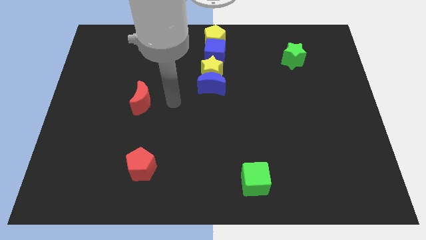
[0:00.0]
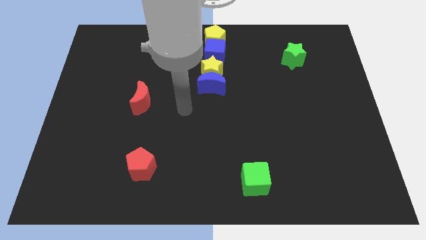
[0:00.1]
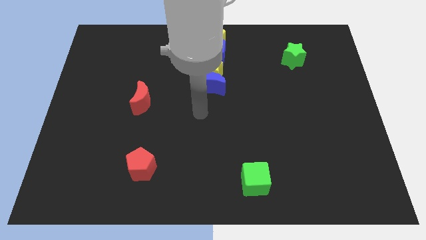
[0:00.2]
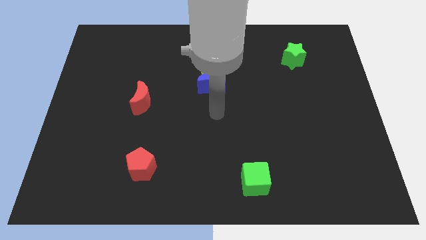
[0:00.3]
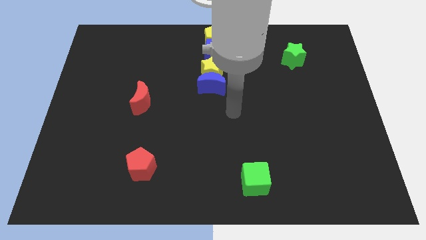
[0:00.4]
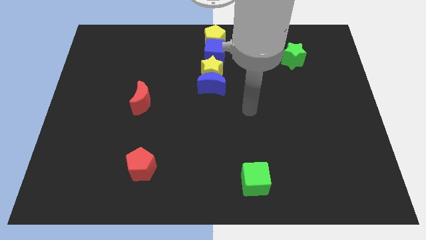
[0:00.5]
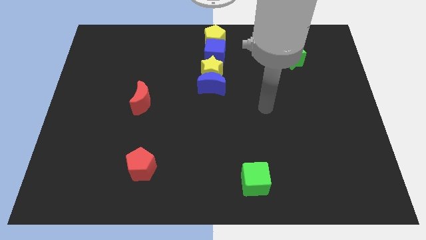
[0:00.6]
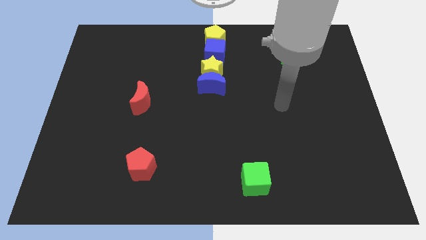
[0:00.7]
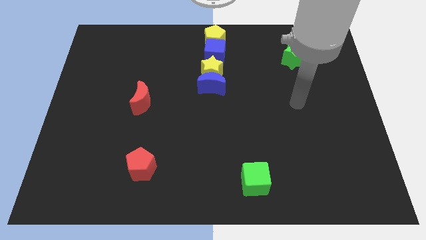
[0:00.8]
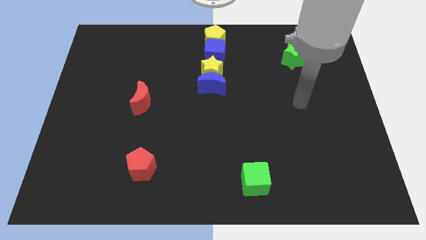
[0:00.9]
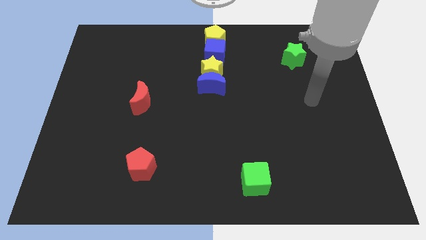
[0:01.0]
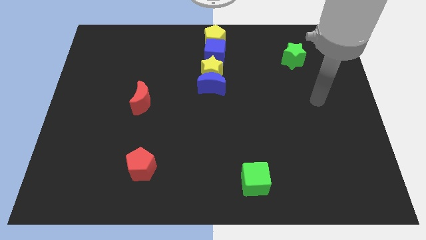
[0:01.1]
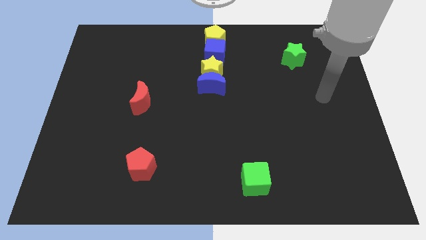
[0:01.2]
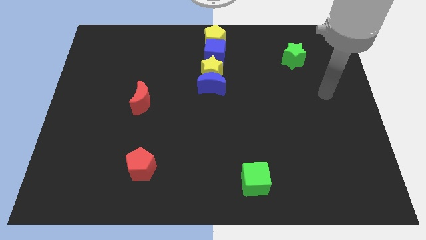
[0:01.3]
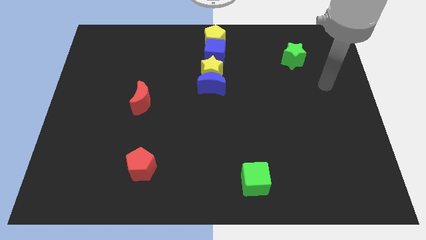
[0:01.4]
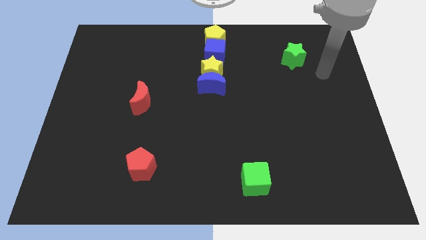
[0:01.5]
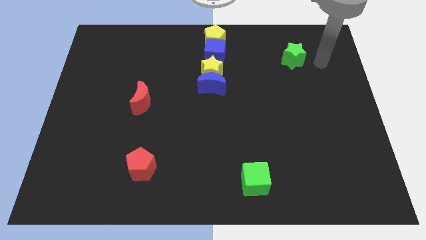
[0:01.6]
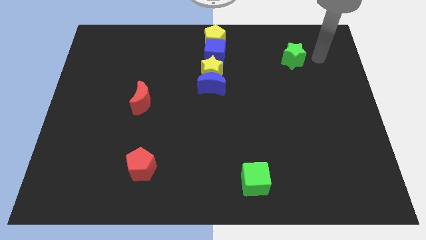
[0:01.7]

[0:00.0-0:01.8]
point your arm to the right of green star

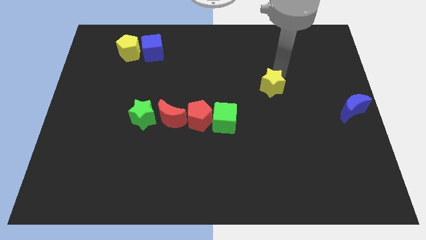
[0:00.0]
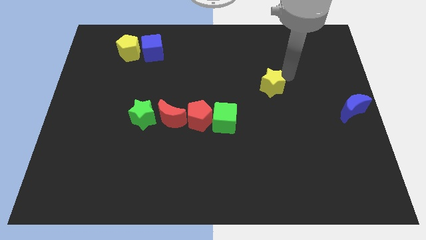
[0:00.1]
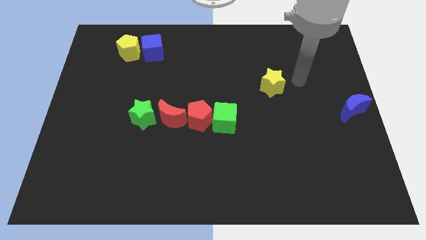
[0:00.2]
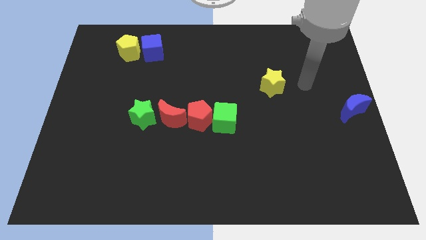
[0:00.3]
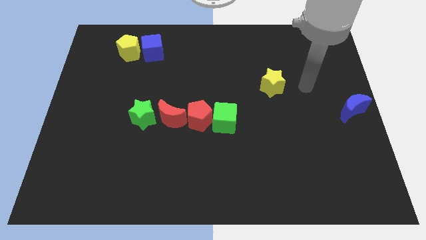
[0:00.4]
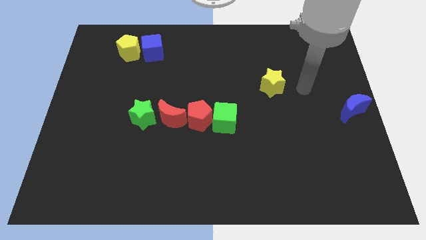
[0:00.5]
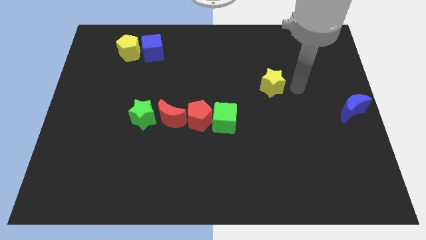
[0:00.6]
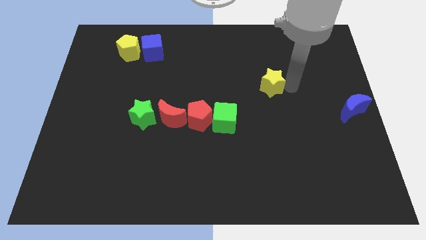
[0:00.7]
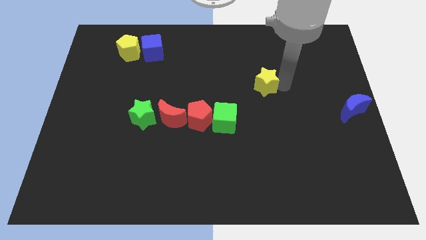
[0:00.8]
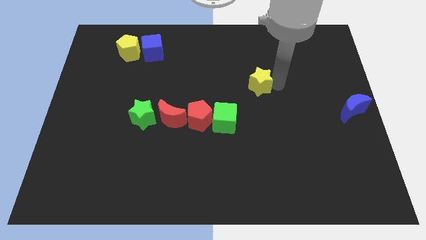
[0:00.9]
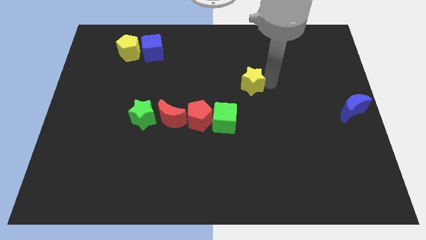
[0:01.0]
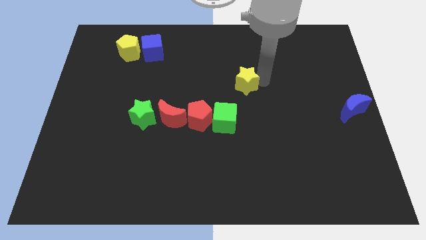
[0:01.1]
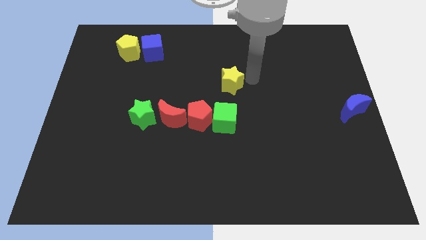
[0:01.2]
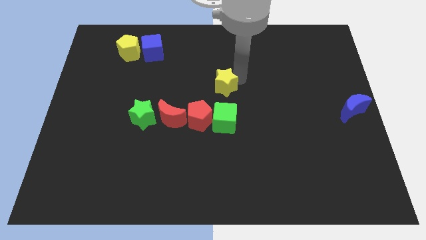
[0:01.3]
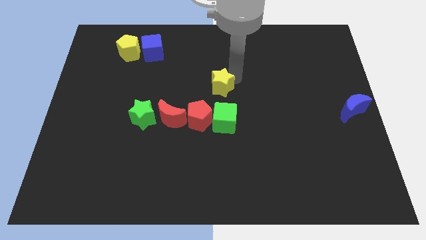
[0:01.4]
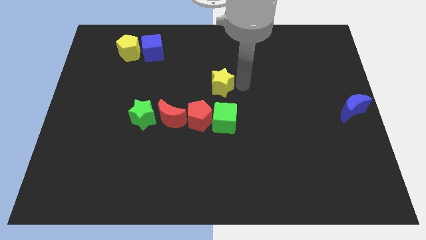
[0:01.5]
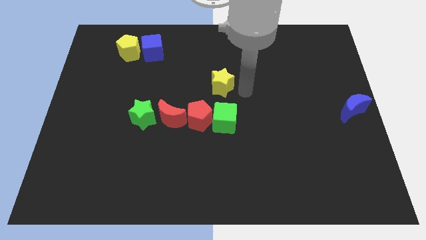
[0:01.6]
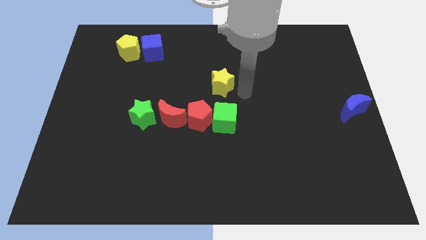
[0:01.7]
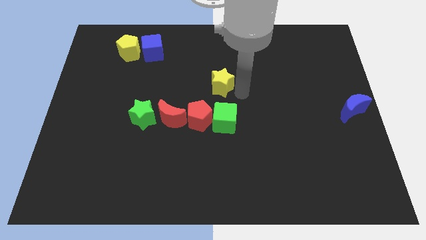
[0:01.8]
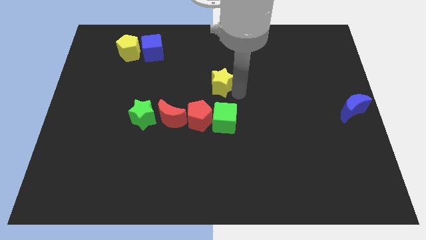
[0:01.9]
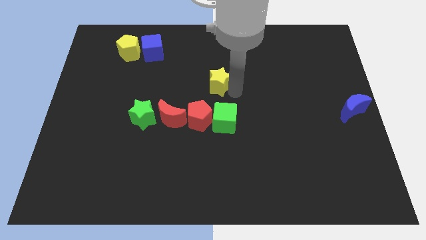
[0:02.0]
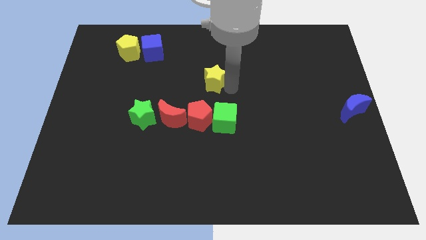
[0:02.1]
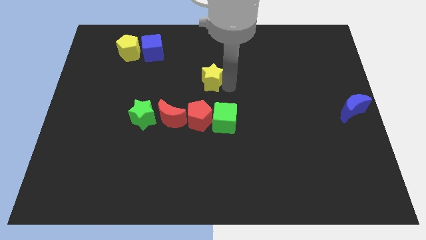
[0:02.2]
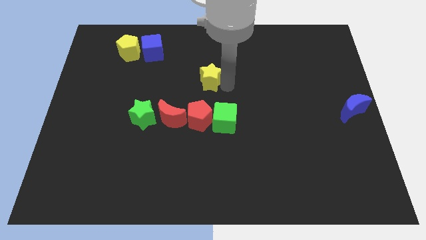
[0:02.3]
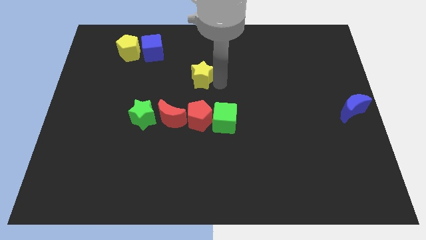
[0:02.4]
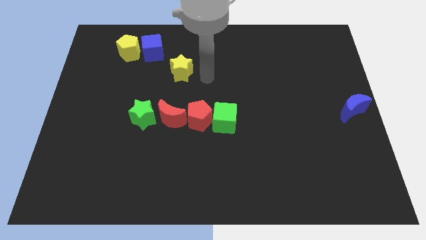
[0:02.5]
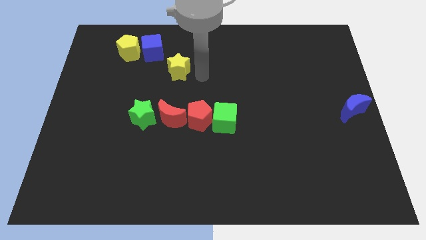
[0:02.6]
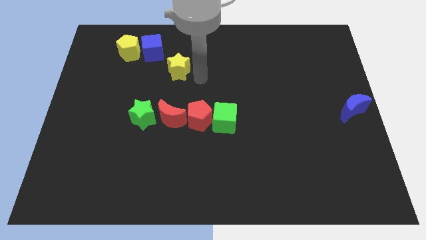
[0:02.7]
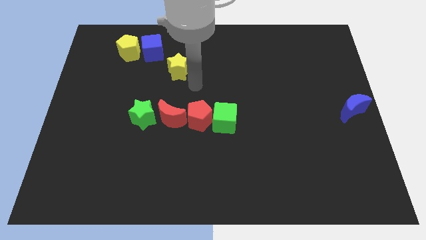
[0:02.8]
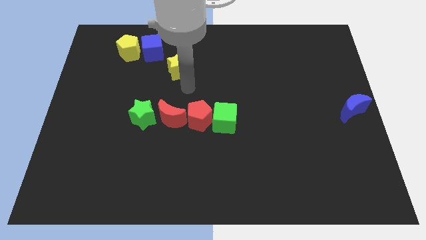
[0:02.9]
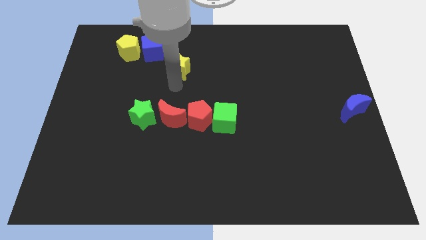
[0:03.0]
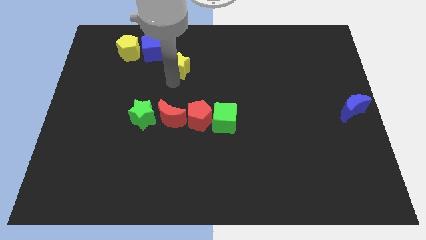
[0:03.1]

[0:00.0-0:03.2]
move yellow star towards blue cube

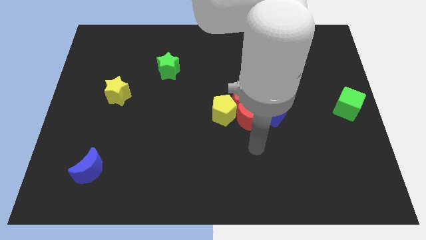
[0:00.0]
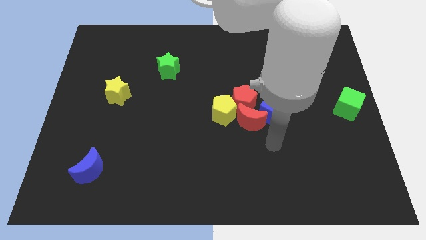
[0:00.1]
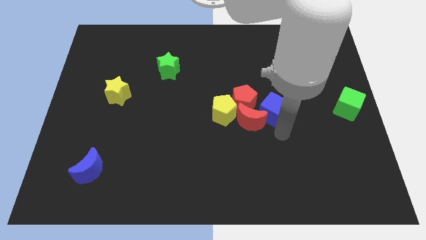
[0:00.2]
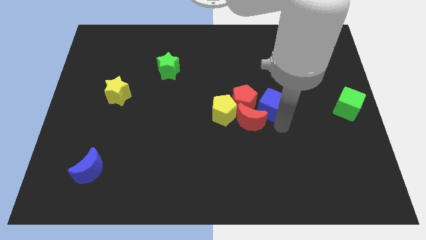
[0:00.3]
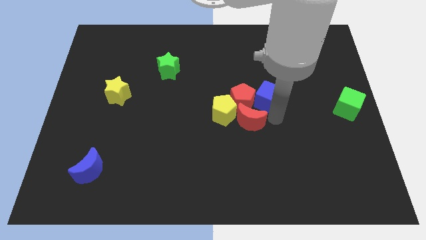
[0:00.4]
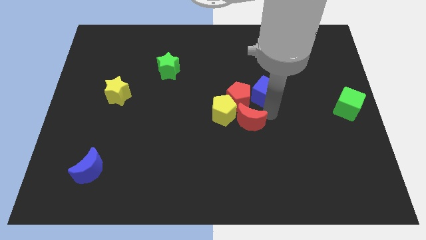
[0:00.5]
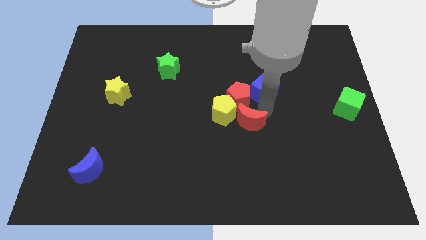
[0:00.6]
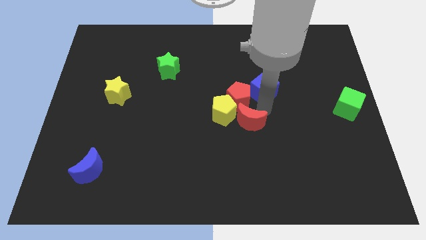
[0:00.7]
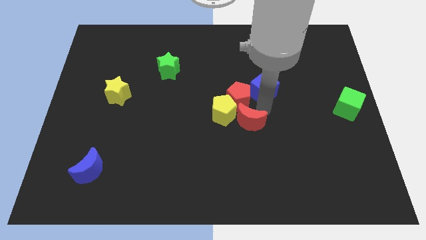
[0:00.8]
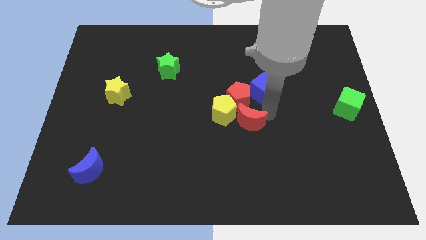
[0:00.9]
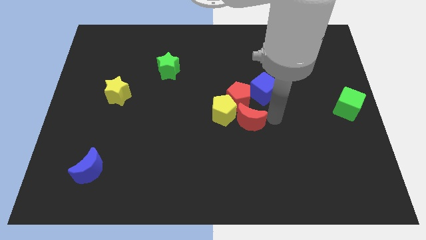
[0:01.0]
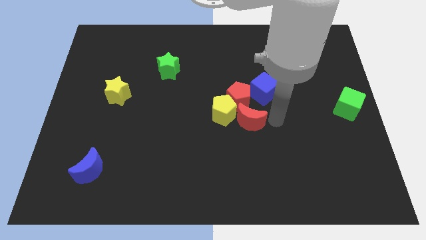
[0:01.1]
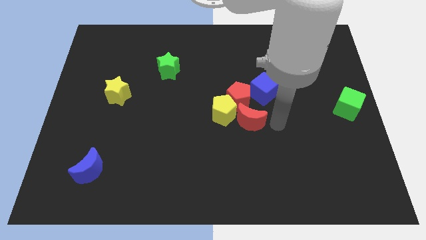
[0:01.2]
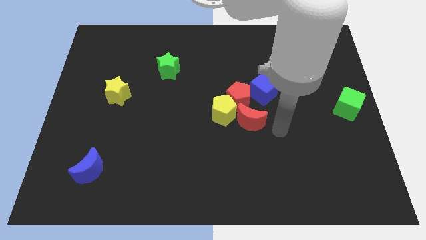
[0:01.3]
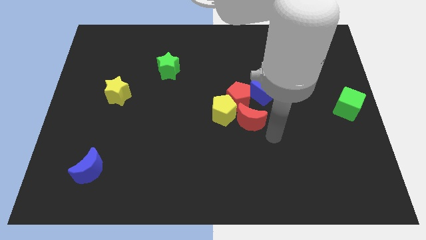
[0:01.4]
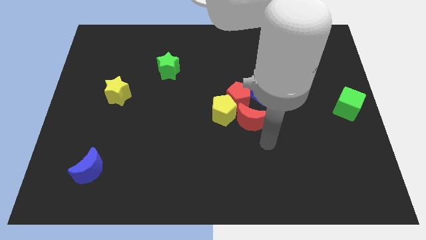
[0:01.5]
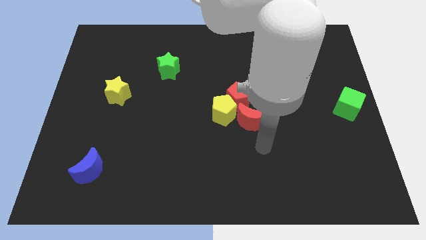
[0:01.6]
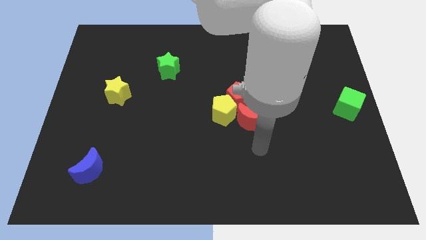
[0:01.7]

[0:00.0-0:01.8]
slightly move the blue cube to the top up

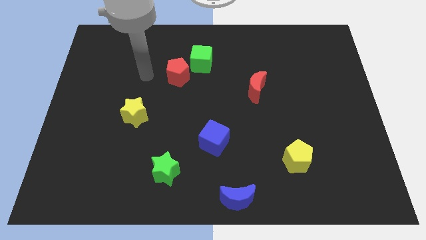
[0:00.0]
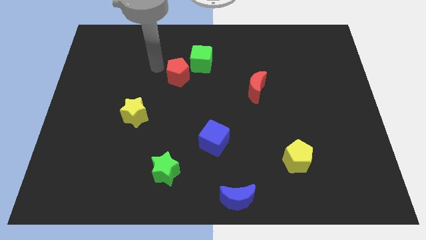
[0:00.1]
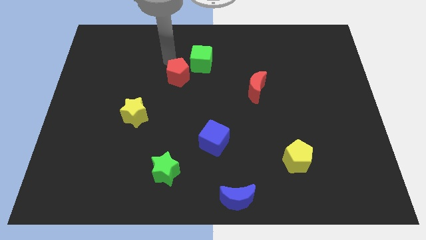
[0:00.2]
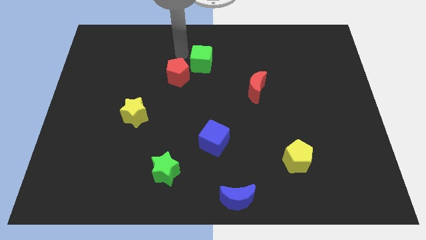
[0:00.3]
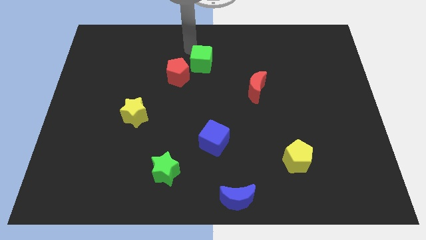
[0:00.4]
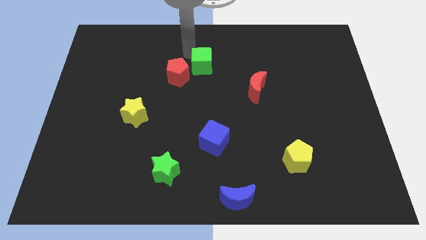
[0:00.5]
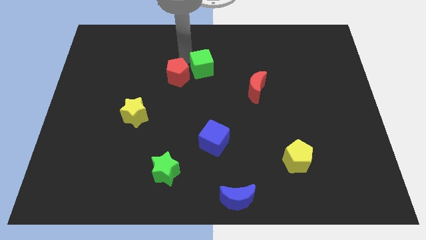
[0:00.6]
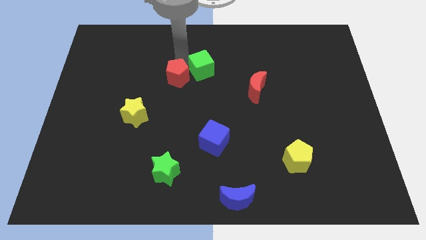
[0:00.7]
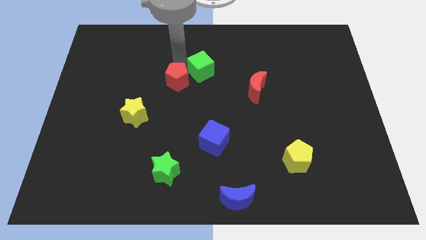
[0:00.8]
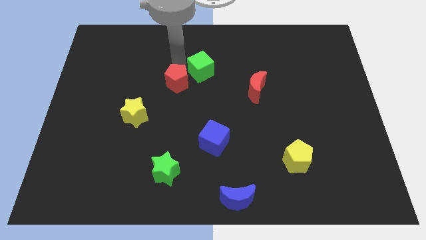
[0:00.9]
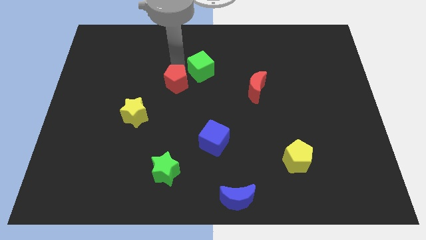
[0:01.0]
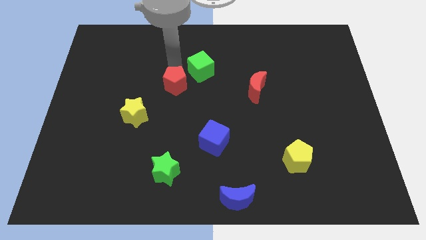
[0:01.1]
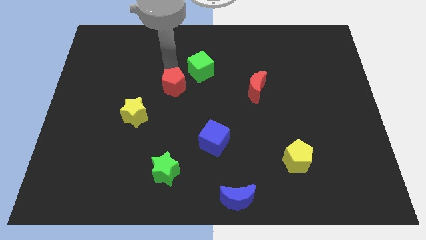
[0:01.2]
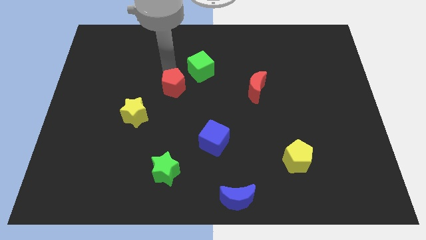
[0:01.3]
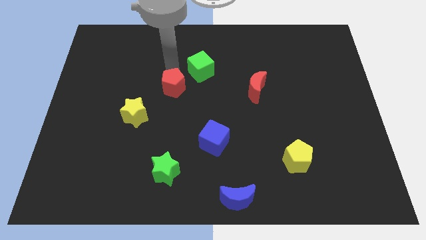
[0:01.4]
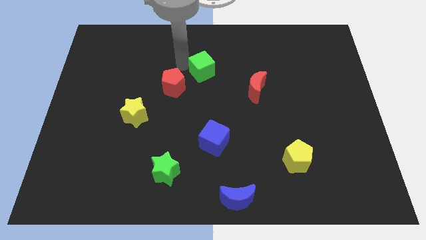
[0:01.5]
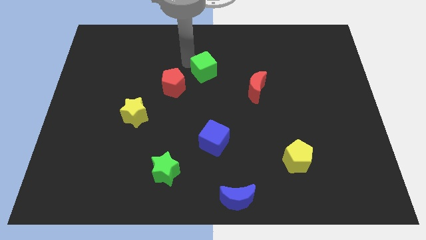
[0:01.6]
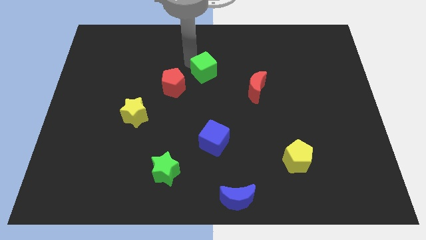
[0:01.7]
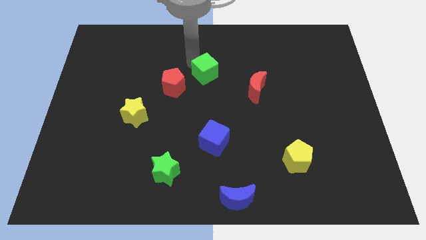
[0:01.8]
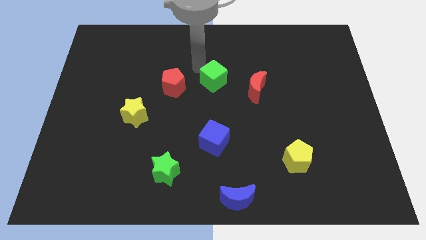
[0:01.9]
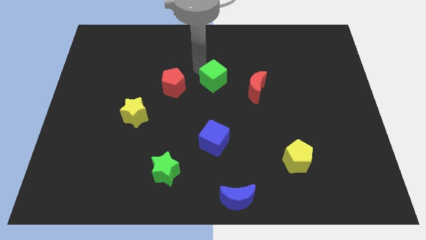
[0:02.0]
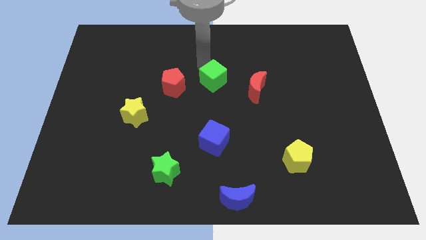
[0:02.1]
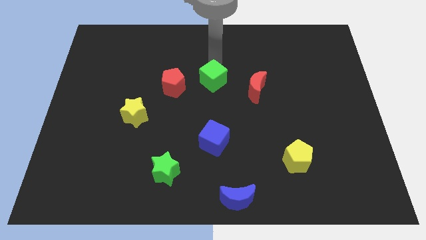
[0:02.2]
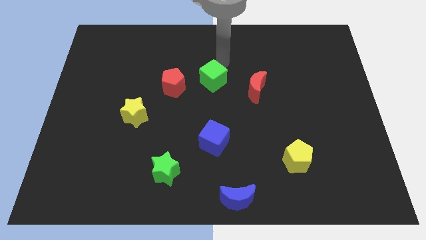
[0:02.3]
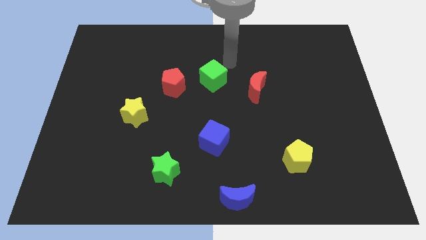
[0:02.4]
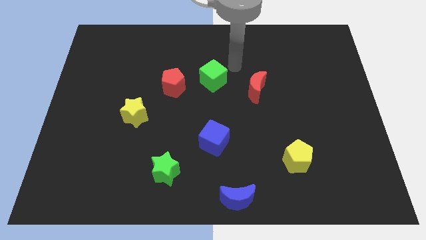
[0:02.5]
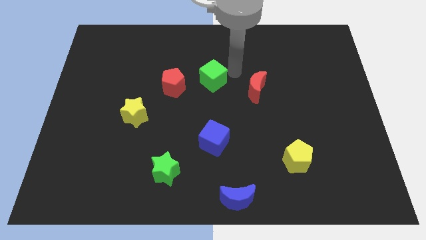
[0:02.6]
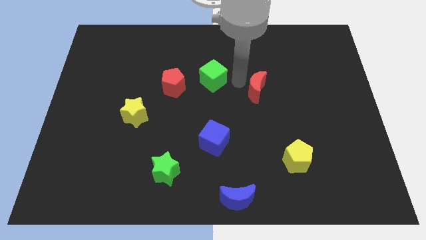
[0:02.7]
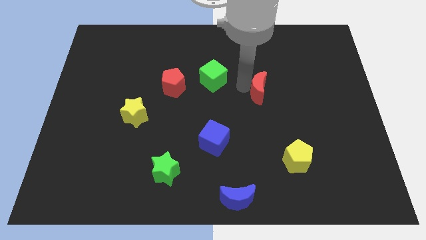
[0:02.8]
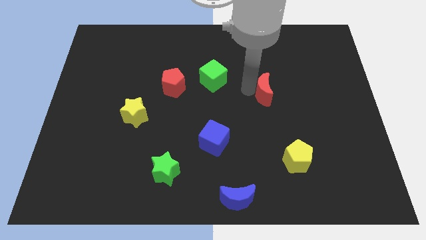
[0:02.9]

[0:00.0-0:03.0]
place green cube to the top of blue cube
